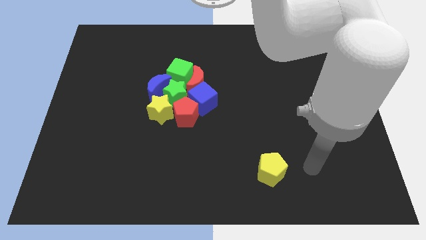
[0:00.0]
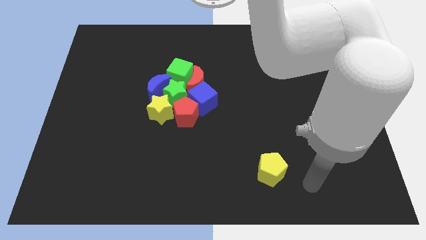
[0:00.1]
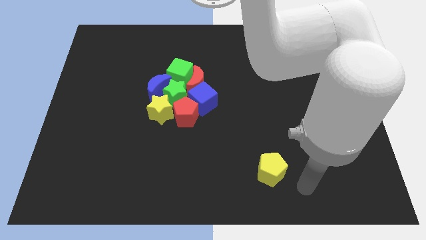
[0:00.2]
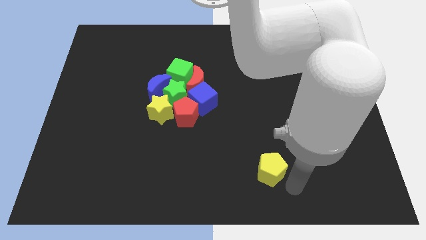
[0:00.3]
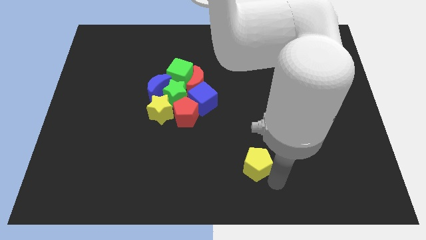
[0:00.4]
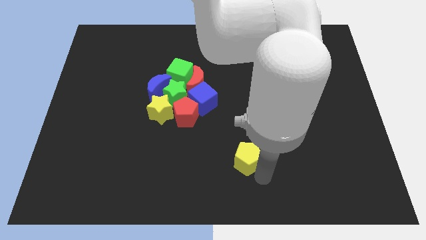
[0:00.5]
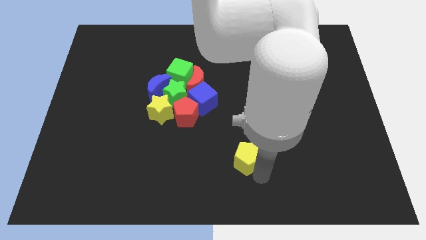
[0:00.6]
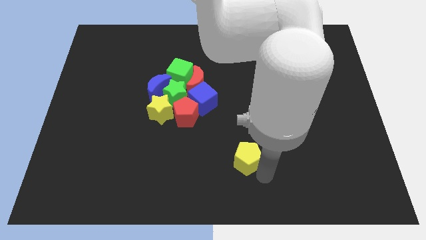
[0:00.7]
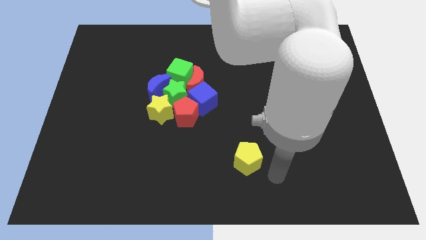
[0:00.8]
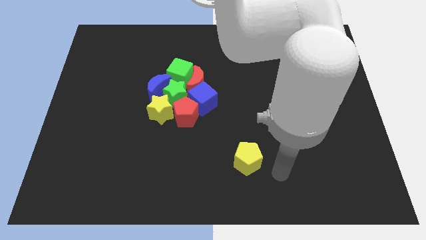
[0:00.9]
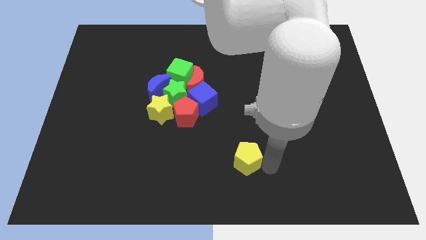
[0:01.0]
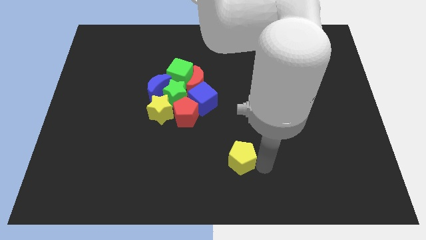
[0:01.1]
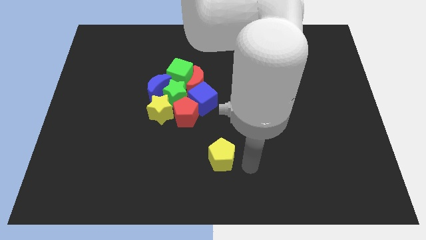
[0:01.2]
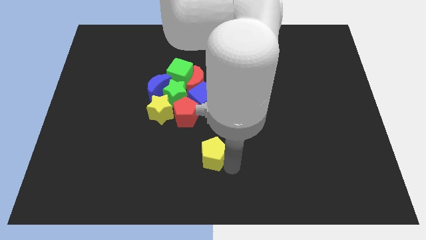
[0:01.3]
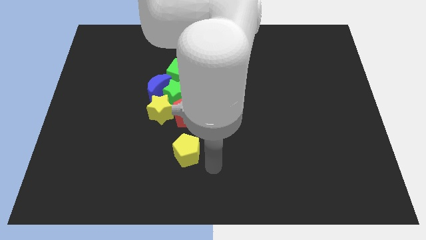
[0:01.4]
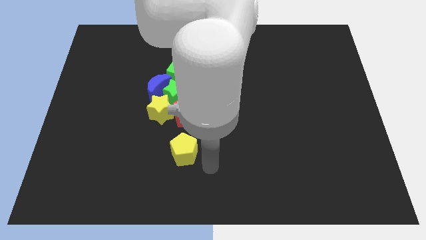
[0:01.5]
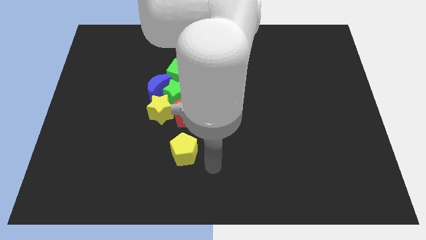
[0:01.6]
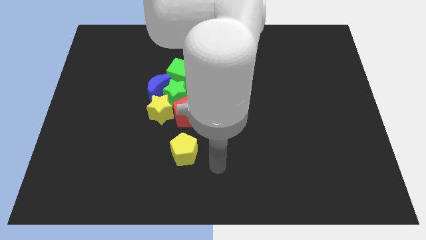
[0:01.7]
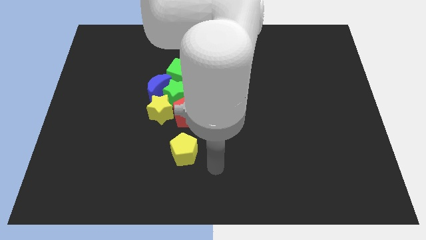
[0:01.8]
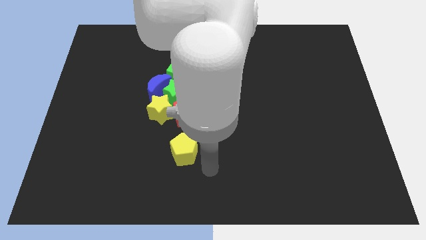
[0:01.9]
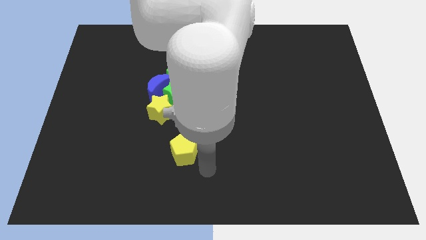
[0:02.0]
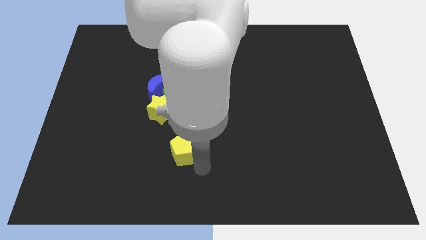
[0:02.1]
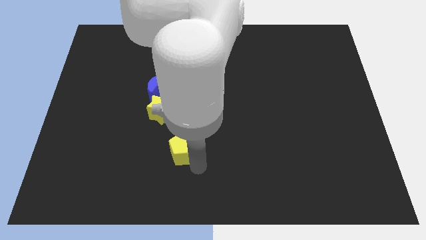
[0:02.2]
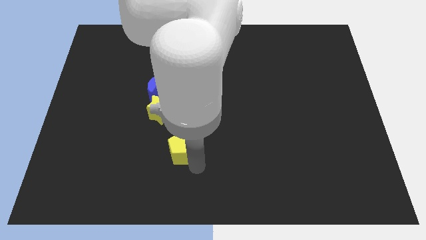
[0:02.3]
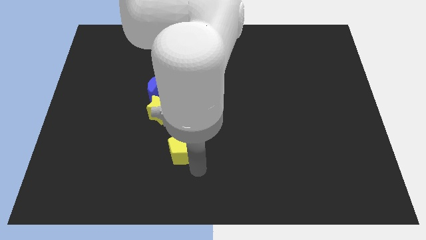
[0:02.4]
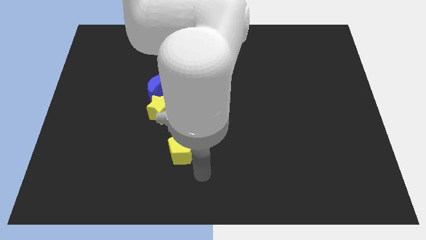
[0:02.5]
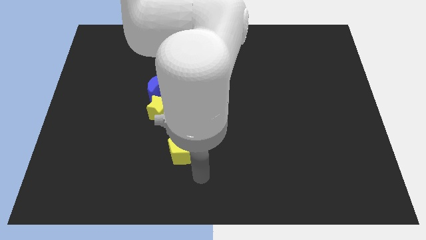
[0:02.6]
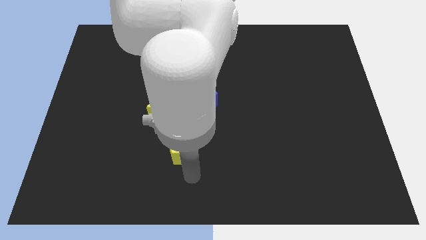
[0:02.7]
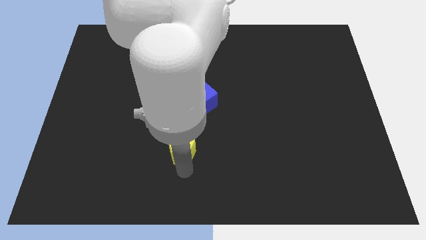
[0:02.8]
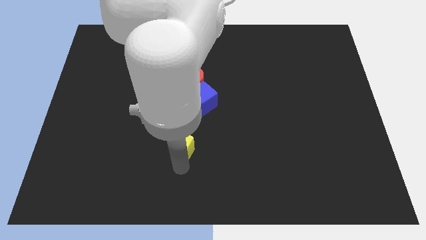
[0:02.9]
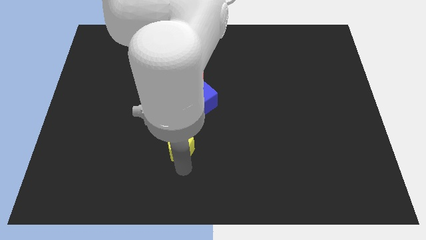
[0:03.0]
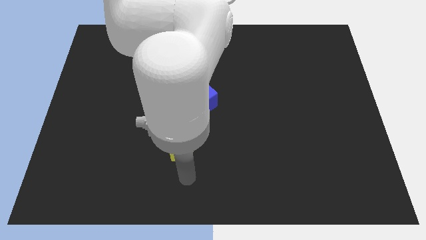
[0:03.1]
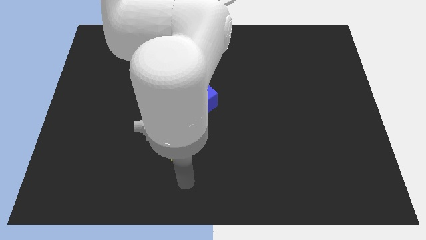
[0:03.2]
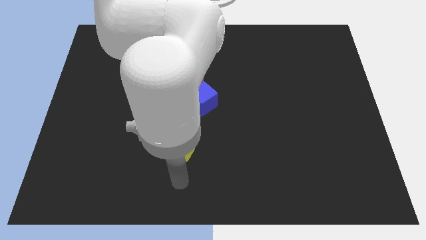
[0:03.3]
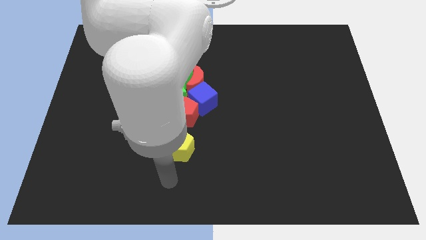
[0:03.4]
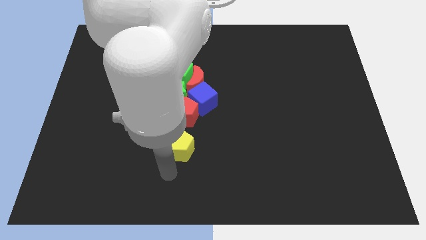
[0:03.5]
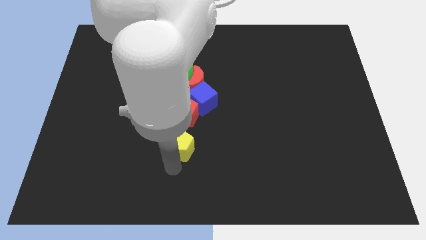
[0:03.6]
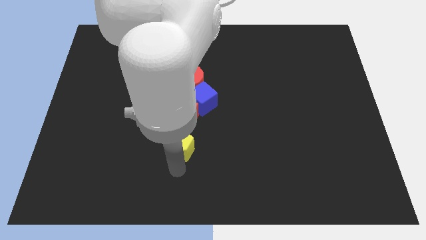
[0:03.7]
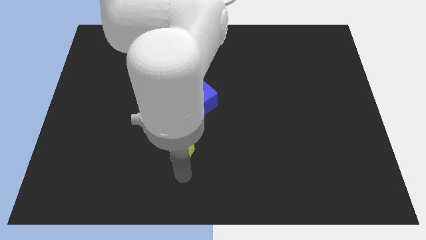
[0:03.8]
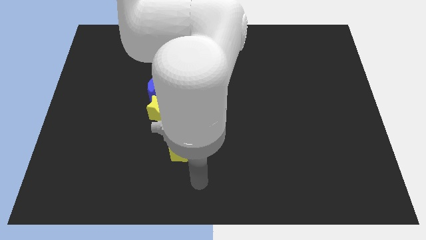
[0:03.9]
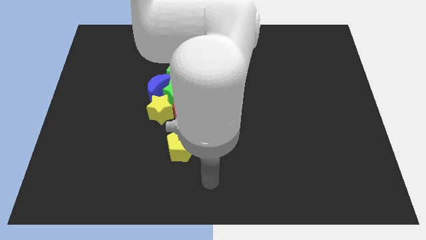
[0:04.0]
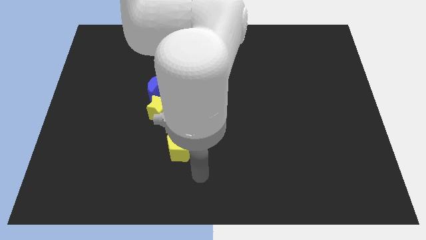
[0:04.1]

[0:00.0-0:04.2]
place the yellow pentagon below the red pentgaon

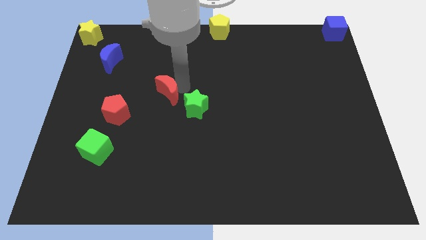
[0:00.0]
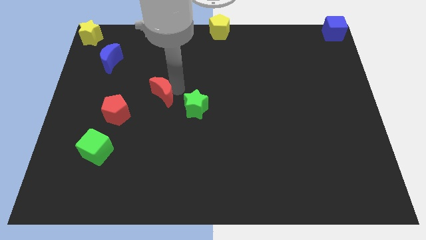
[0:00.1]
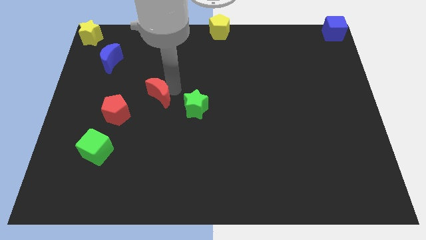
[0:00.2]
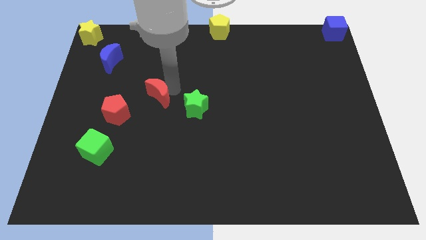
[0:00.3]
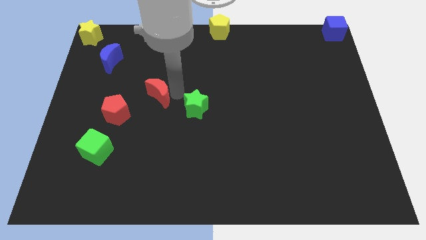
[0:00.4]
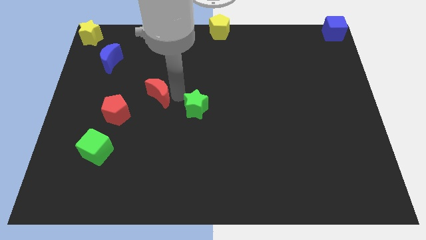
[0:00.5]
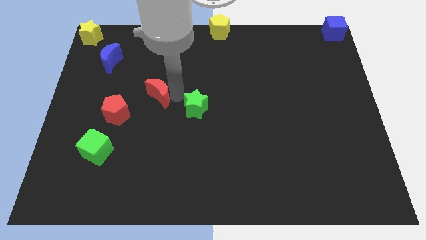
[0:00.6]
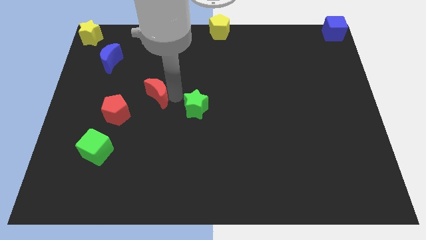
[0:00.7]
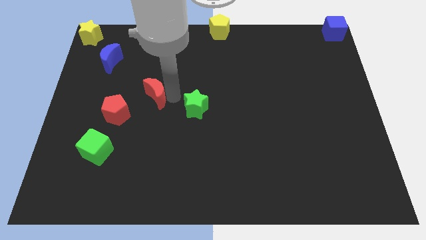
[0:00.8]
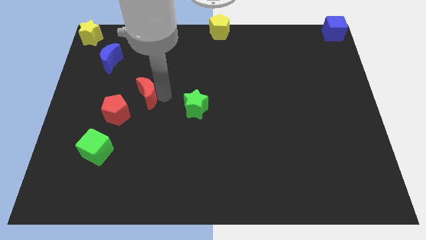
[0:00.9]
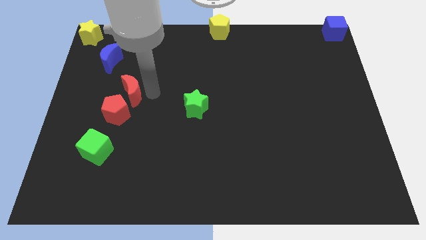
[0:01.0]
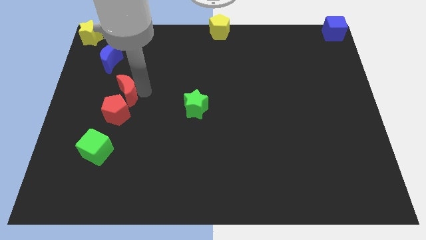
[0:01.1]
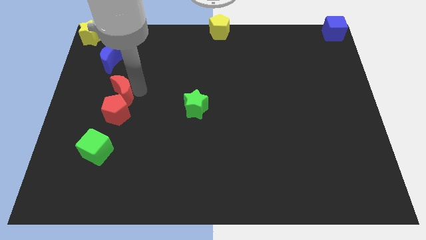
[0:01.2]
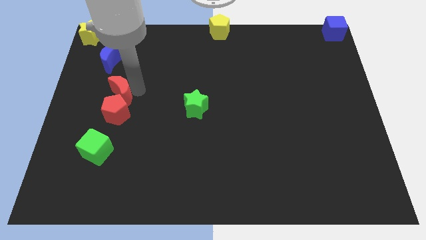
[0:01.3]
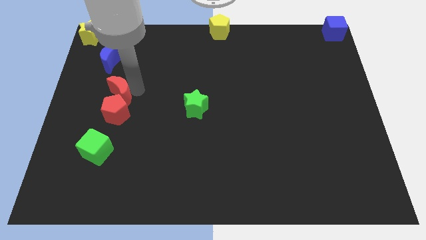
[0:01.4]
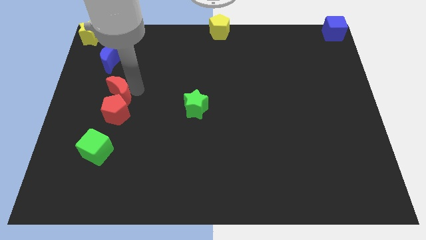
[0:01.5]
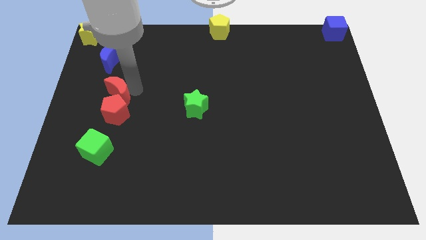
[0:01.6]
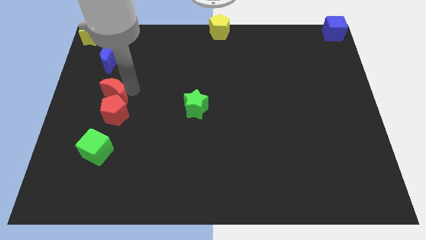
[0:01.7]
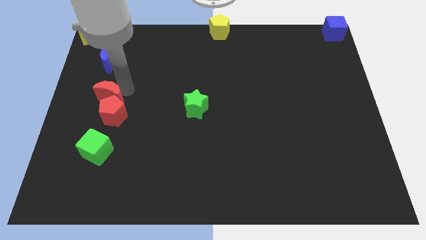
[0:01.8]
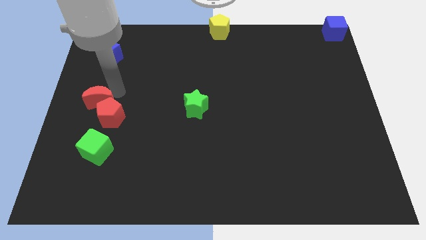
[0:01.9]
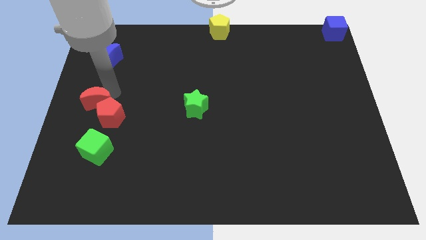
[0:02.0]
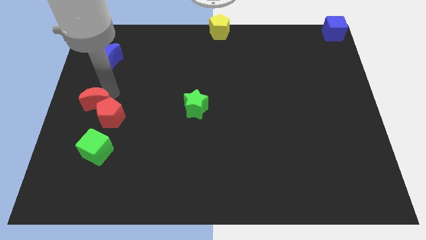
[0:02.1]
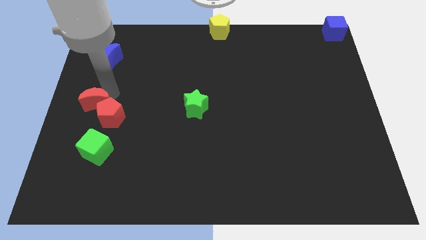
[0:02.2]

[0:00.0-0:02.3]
push the red moon into the red pentagon

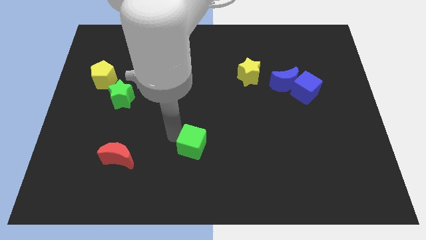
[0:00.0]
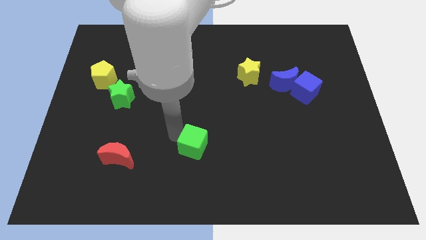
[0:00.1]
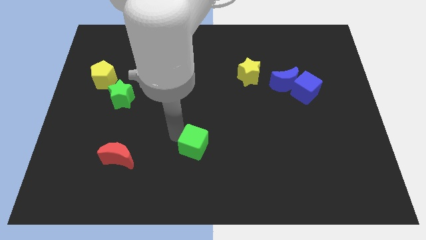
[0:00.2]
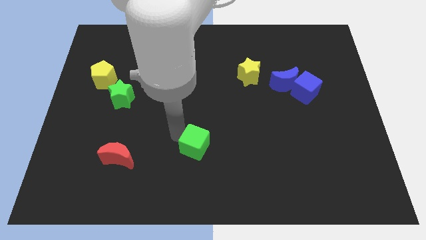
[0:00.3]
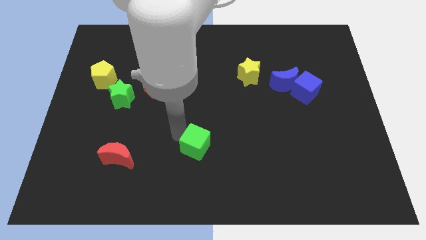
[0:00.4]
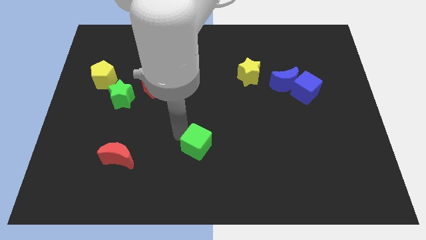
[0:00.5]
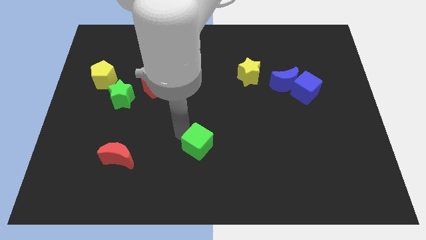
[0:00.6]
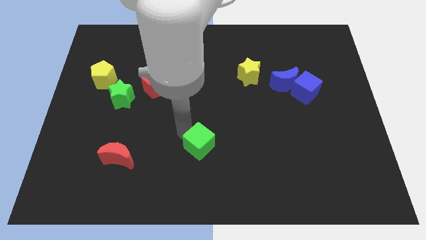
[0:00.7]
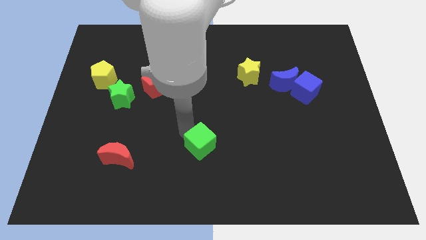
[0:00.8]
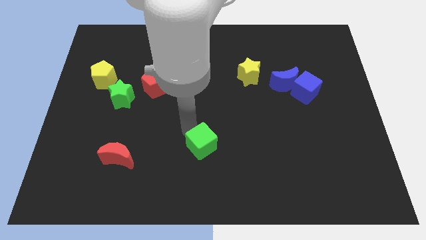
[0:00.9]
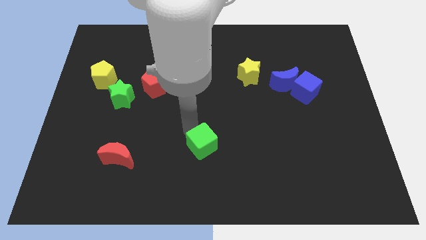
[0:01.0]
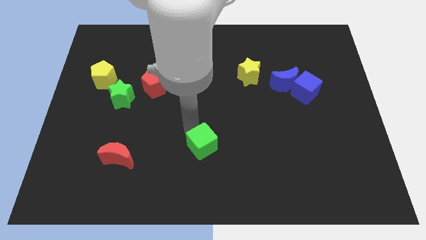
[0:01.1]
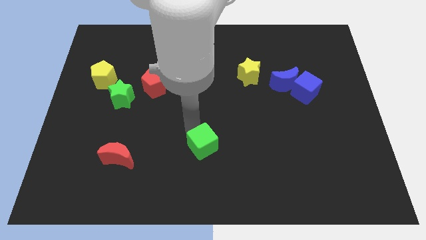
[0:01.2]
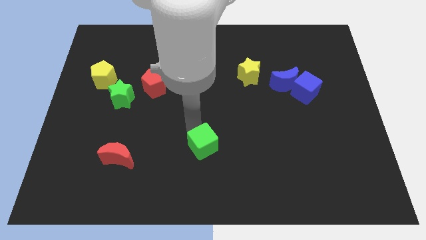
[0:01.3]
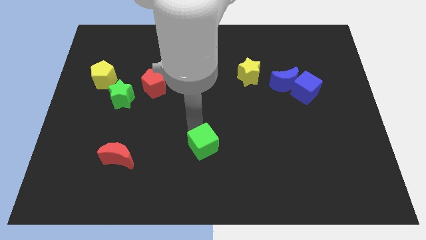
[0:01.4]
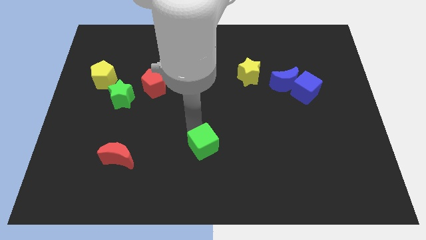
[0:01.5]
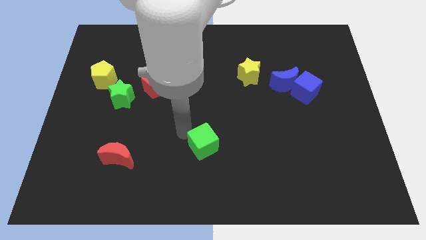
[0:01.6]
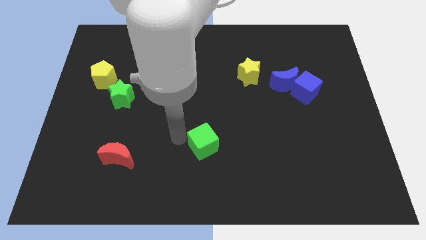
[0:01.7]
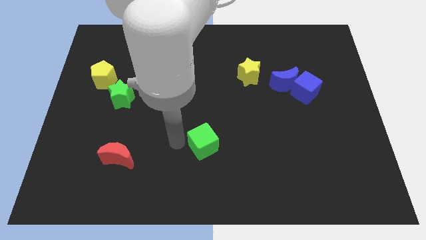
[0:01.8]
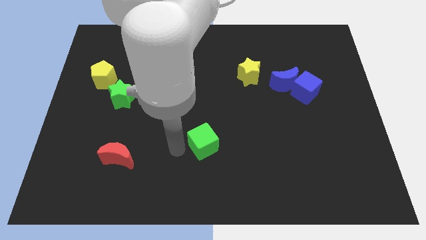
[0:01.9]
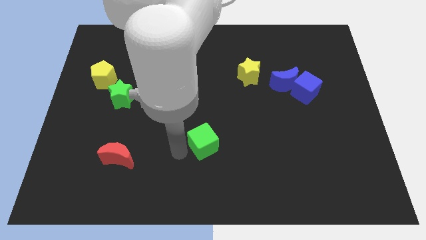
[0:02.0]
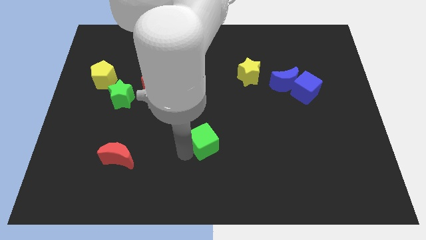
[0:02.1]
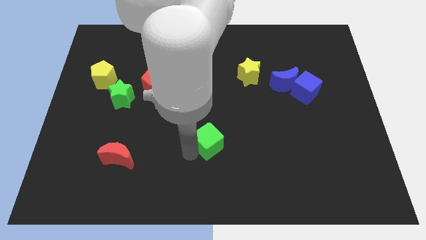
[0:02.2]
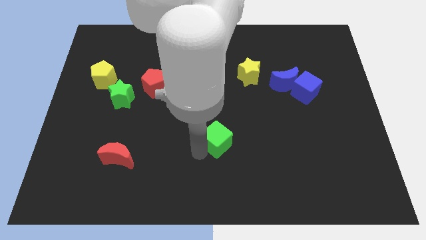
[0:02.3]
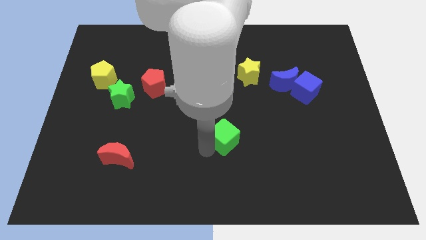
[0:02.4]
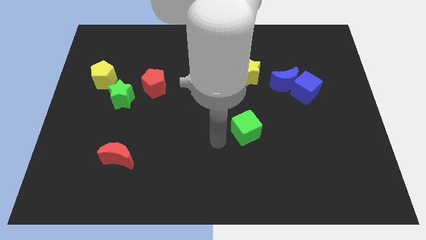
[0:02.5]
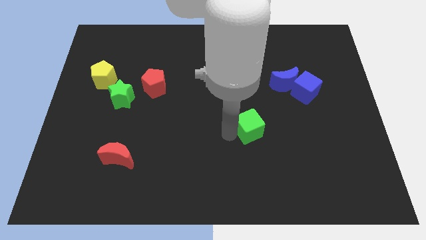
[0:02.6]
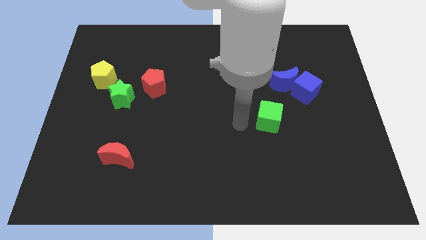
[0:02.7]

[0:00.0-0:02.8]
push green cube towards blue blocks
